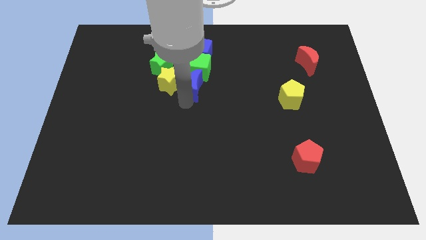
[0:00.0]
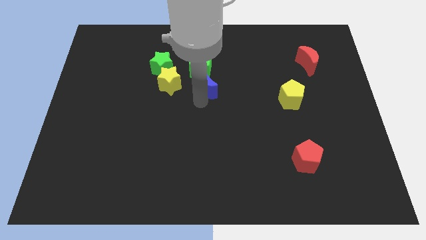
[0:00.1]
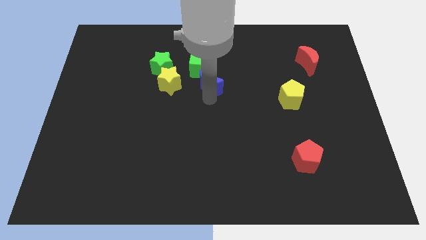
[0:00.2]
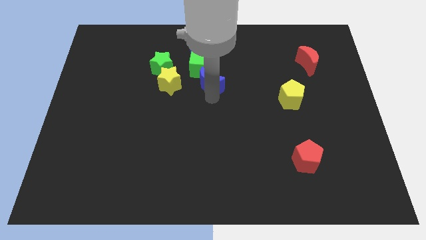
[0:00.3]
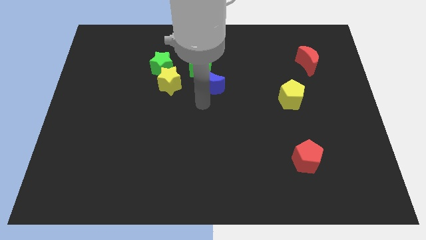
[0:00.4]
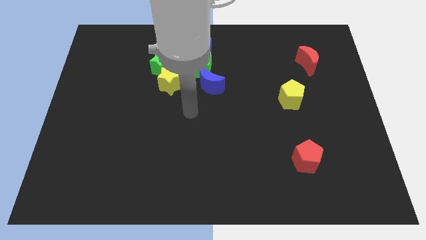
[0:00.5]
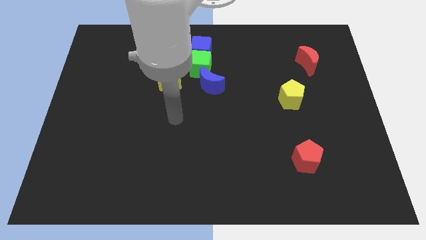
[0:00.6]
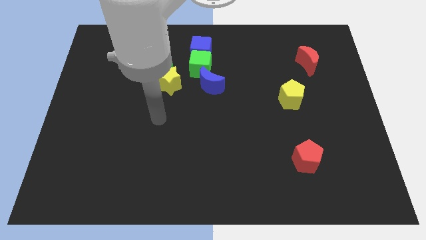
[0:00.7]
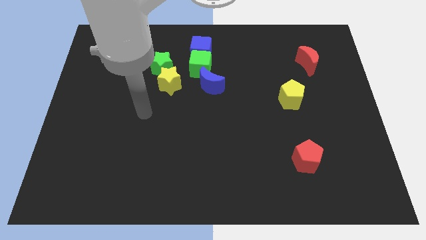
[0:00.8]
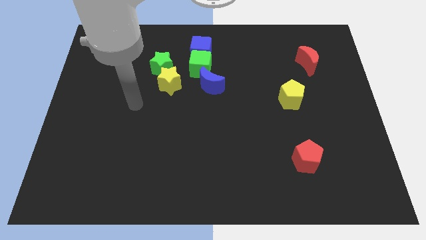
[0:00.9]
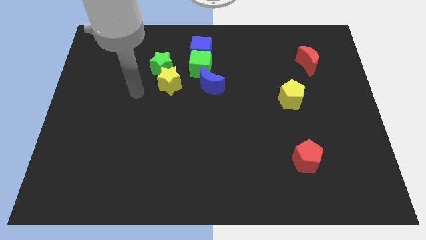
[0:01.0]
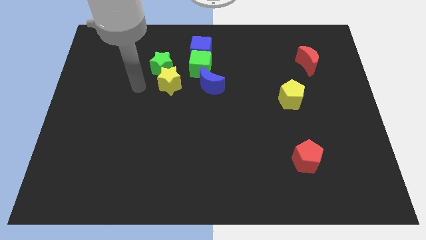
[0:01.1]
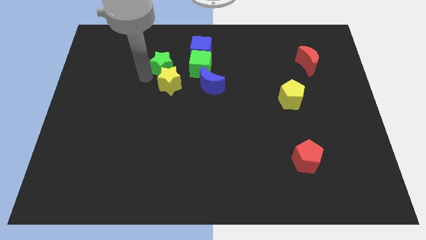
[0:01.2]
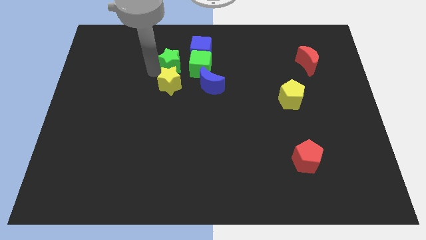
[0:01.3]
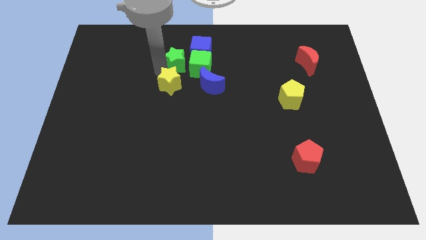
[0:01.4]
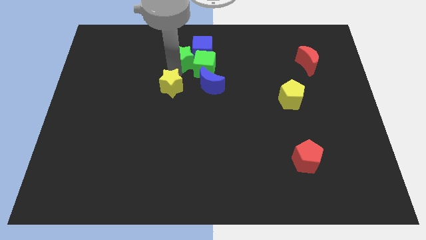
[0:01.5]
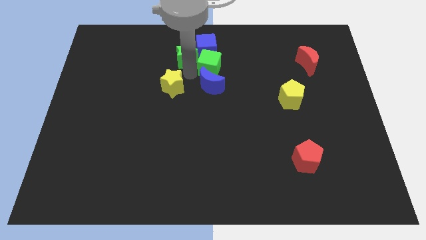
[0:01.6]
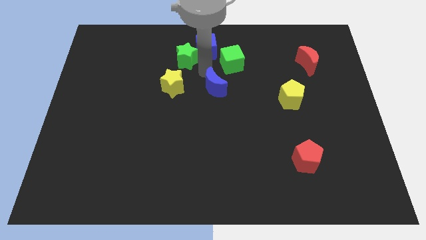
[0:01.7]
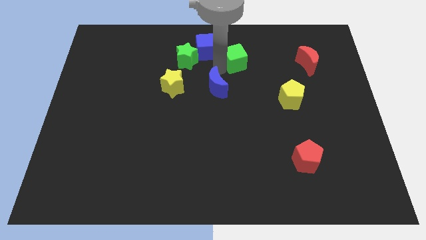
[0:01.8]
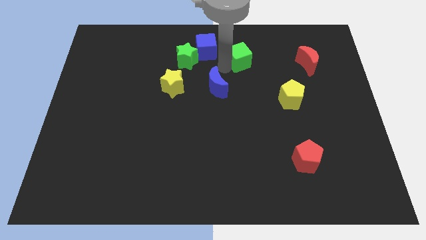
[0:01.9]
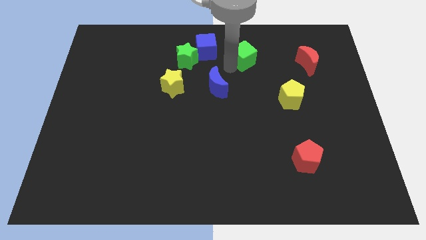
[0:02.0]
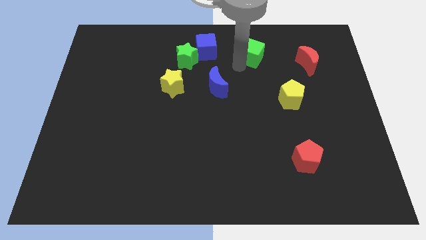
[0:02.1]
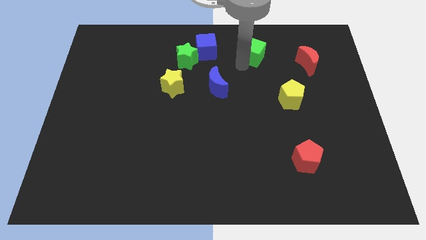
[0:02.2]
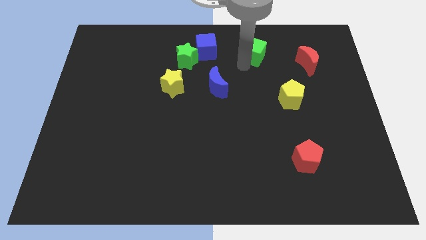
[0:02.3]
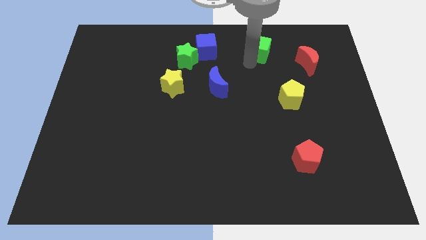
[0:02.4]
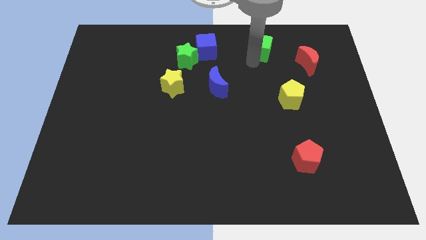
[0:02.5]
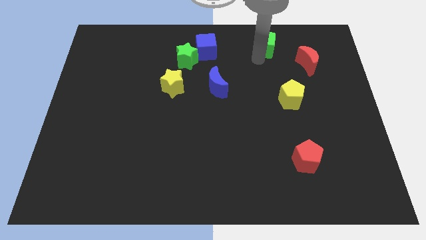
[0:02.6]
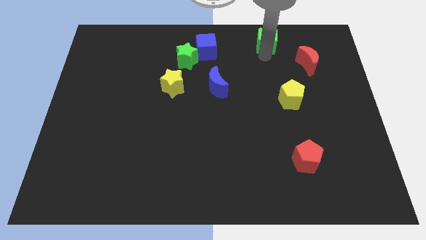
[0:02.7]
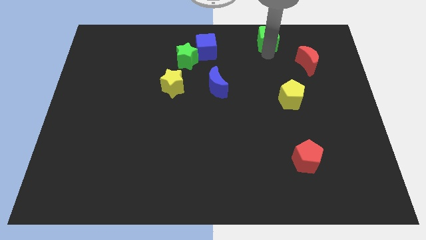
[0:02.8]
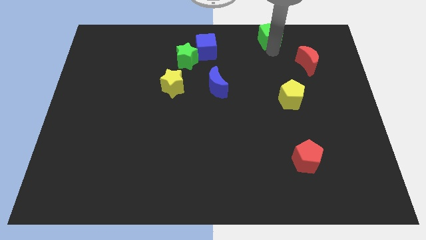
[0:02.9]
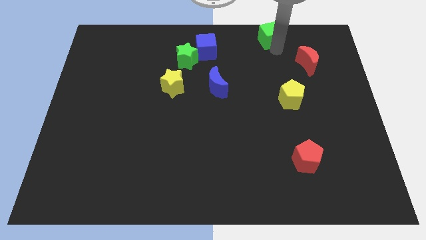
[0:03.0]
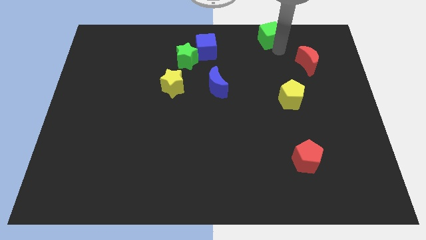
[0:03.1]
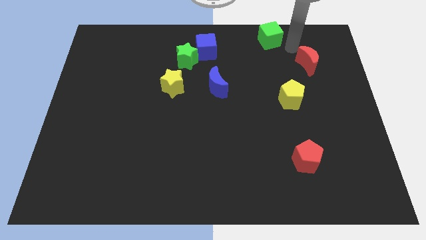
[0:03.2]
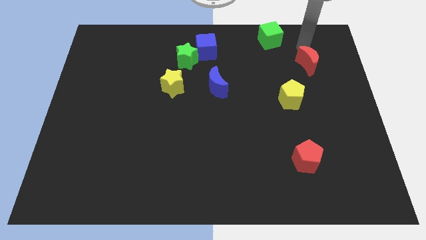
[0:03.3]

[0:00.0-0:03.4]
separate yellow star and green star

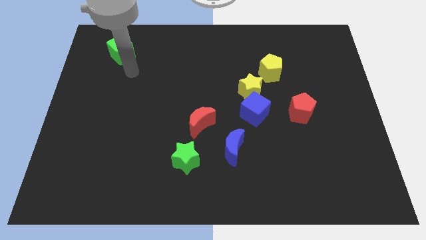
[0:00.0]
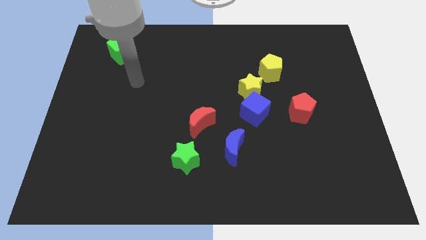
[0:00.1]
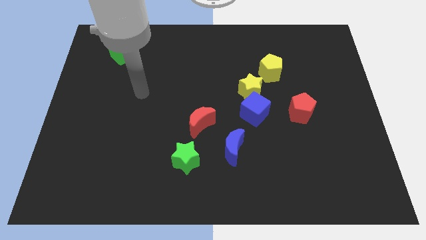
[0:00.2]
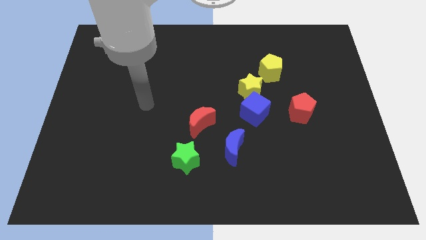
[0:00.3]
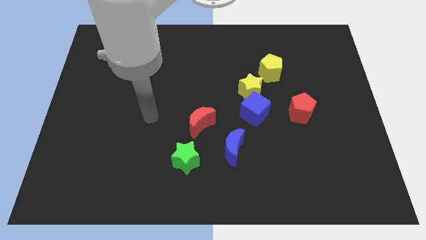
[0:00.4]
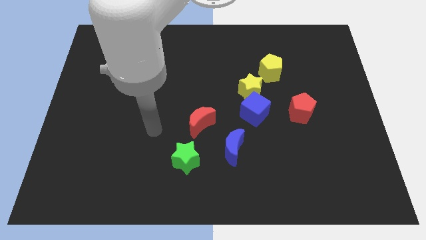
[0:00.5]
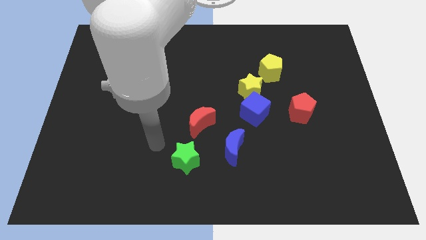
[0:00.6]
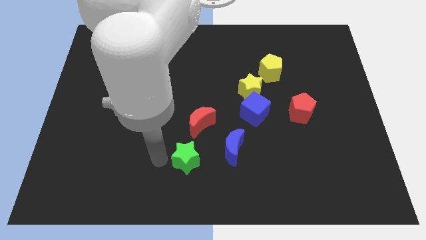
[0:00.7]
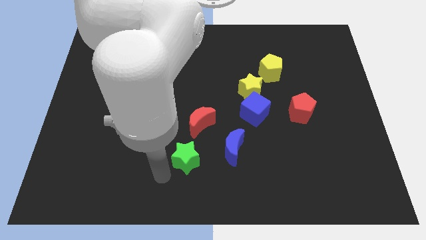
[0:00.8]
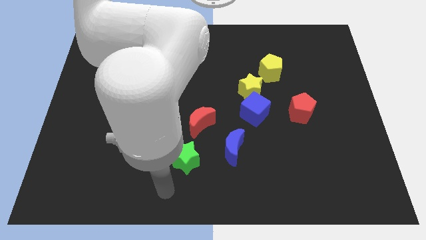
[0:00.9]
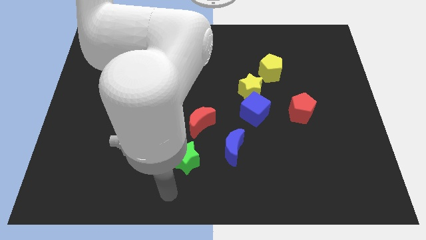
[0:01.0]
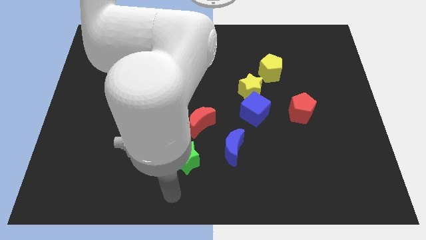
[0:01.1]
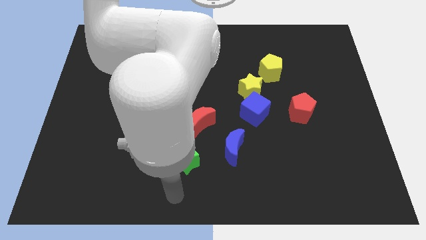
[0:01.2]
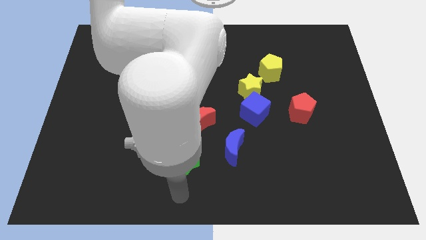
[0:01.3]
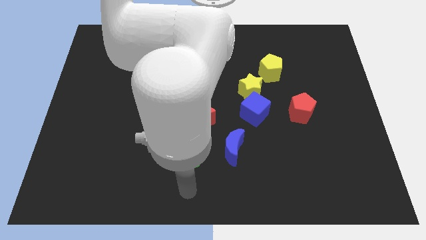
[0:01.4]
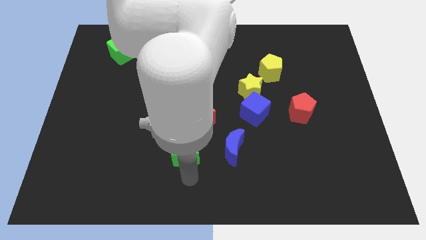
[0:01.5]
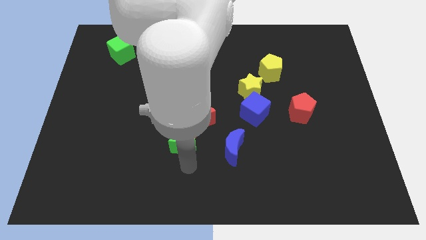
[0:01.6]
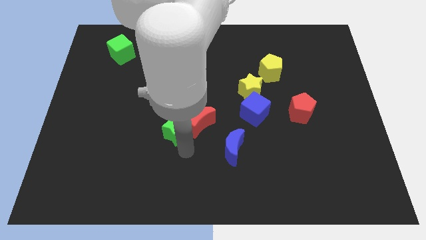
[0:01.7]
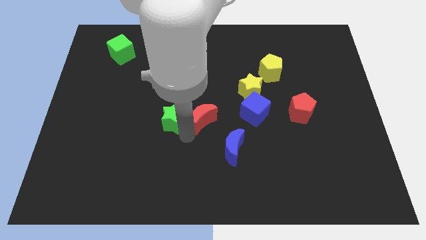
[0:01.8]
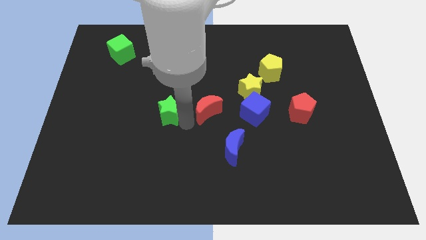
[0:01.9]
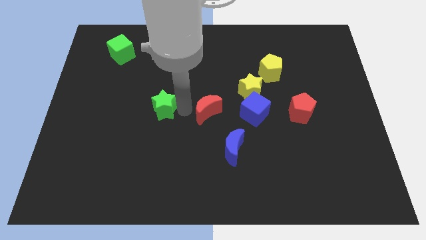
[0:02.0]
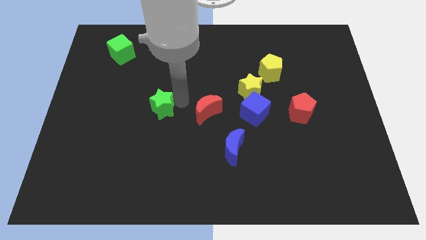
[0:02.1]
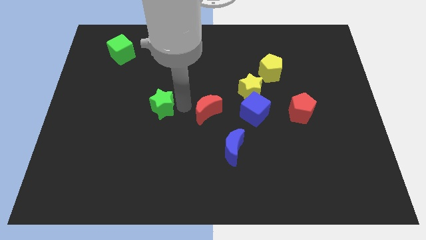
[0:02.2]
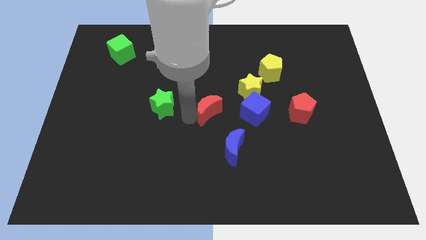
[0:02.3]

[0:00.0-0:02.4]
push the green star into the red moon

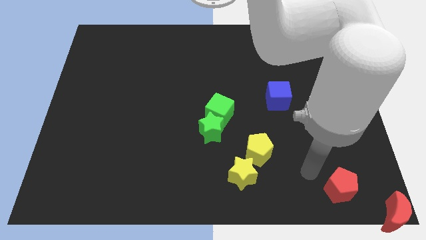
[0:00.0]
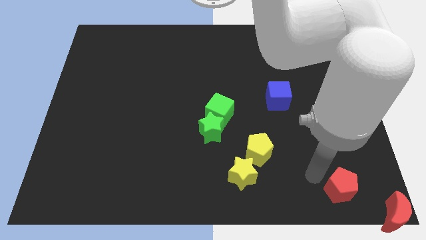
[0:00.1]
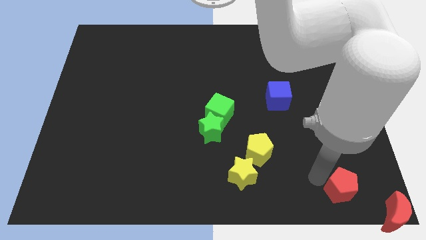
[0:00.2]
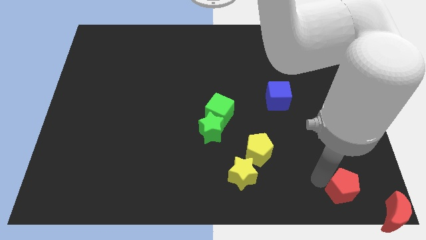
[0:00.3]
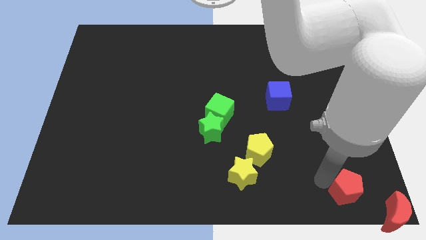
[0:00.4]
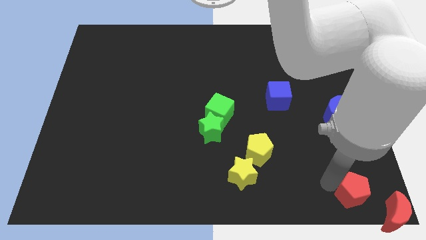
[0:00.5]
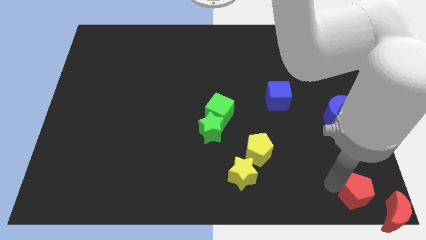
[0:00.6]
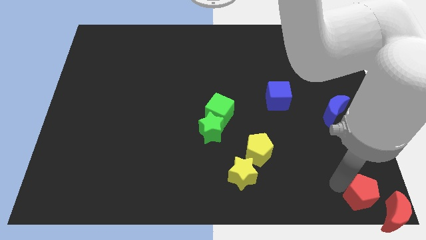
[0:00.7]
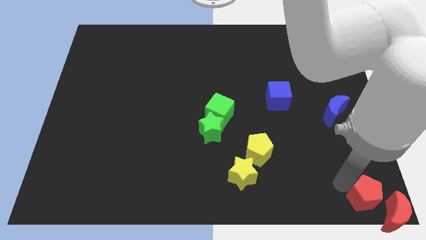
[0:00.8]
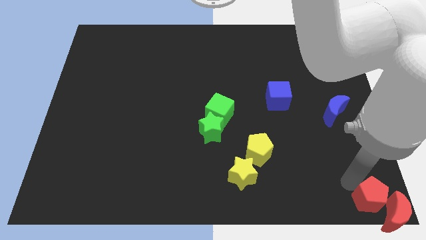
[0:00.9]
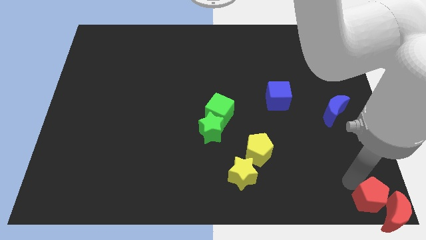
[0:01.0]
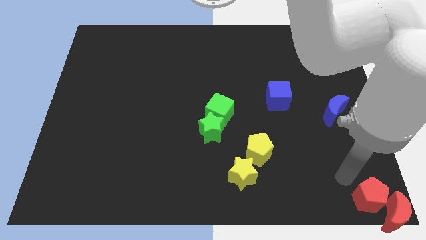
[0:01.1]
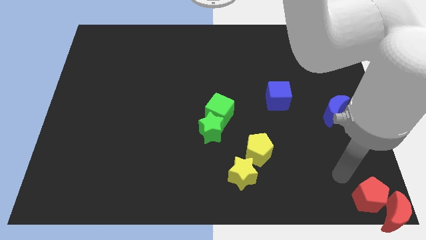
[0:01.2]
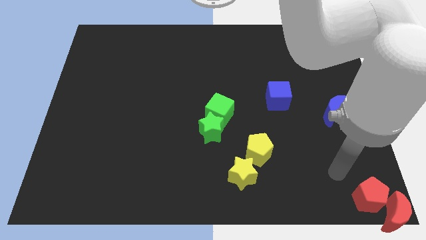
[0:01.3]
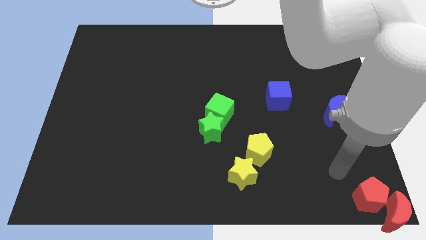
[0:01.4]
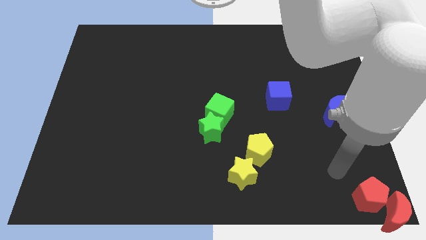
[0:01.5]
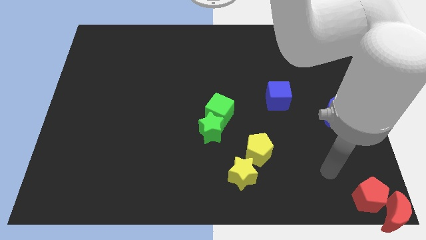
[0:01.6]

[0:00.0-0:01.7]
move the red pentagon to the left of the red crescent

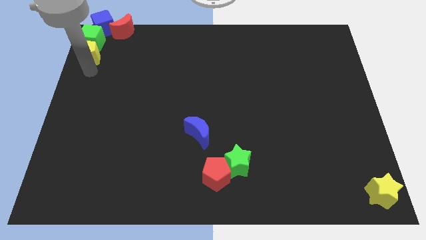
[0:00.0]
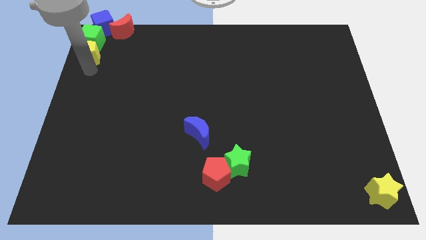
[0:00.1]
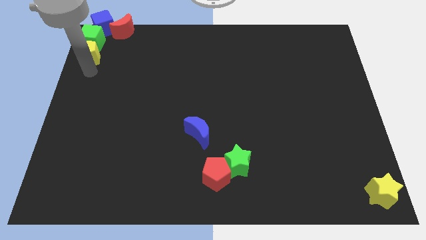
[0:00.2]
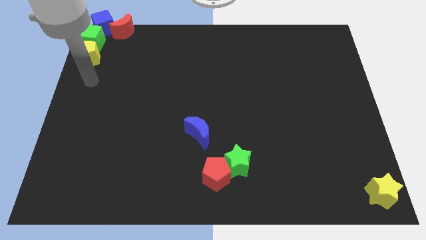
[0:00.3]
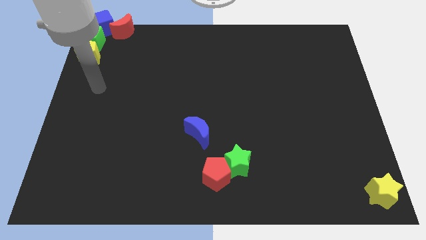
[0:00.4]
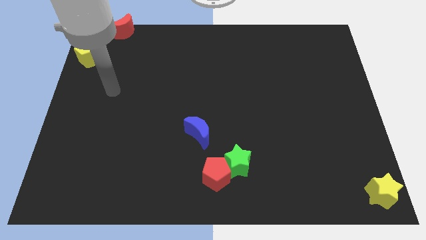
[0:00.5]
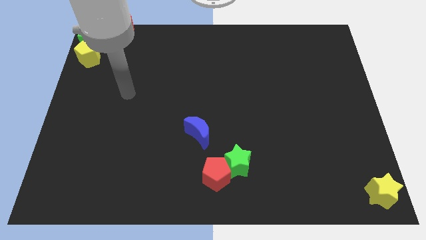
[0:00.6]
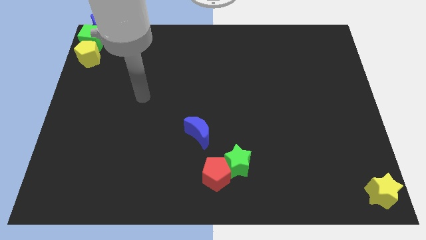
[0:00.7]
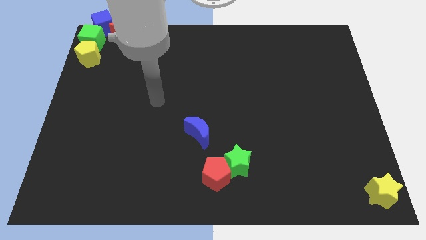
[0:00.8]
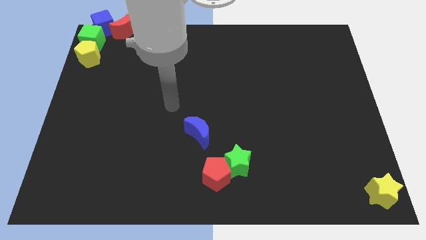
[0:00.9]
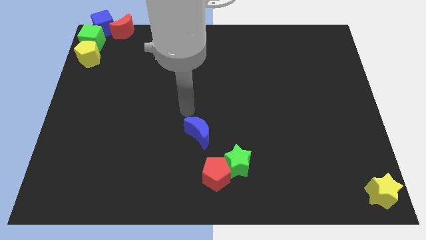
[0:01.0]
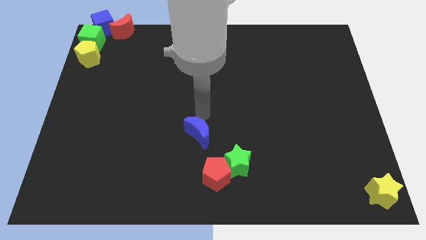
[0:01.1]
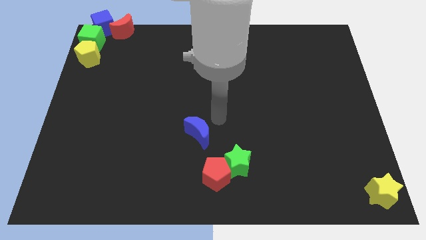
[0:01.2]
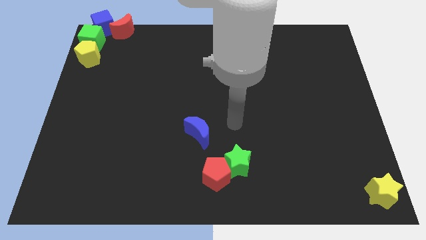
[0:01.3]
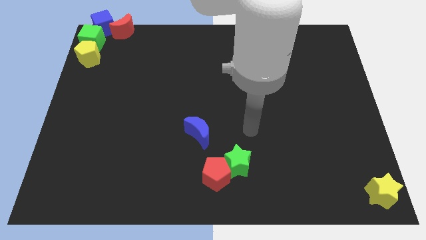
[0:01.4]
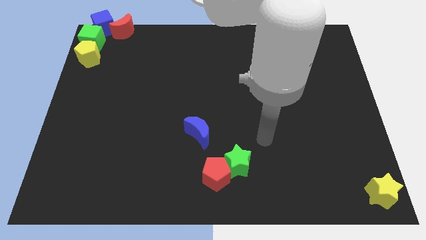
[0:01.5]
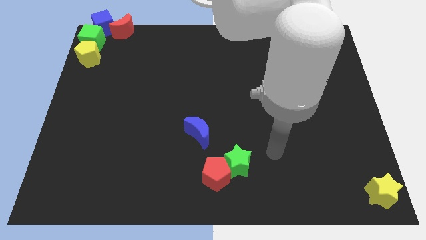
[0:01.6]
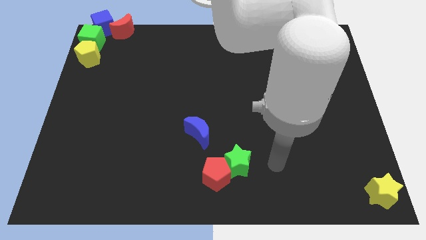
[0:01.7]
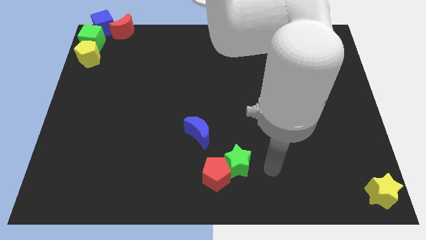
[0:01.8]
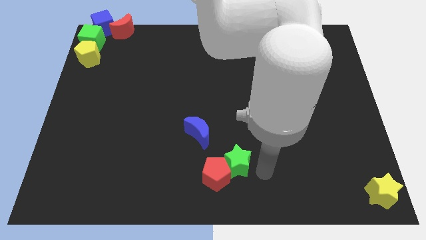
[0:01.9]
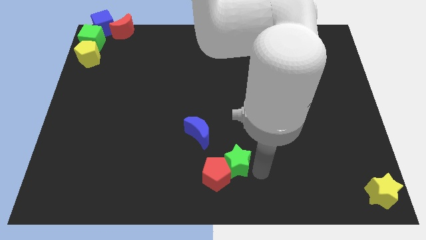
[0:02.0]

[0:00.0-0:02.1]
point your arm towards green star
